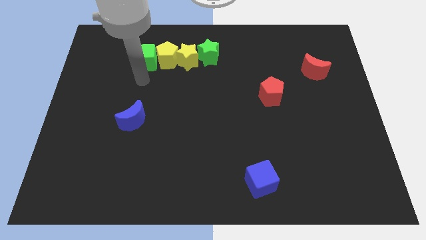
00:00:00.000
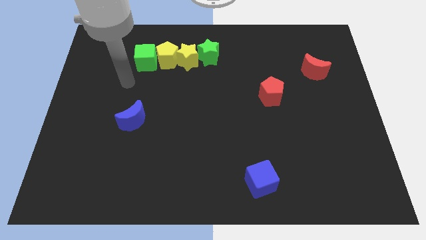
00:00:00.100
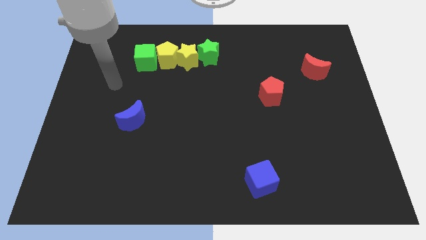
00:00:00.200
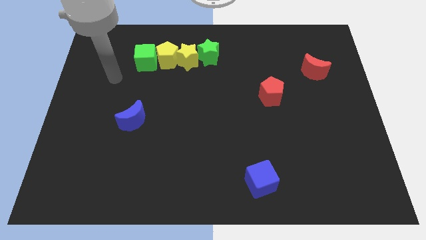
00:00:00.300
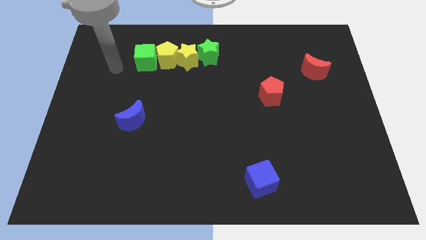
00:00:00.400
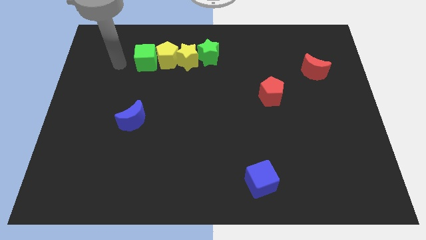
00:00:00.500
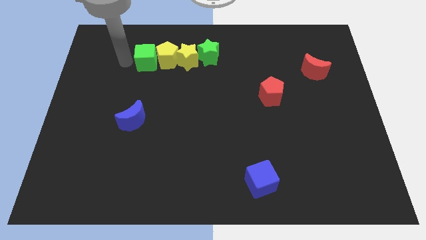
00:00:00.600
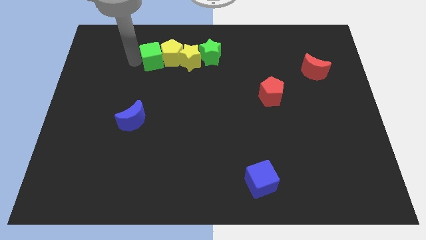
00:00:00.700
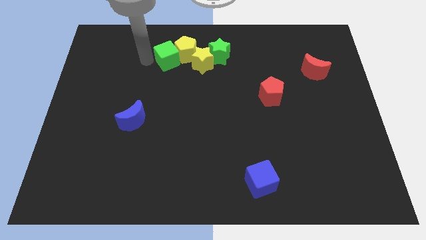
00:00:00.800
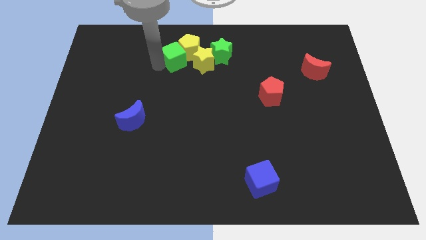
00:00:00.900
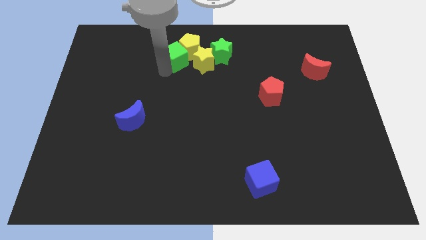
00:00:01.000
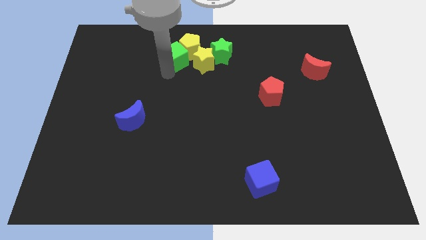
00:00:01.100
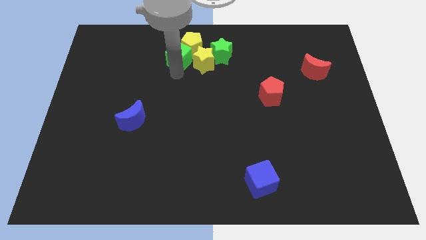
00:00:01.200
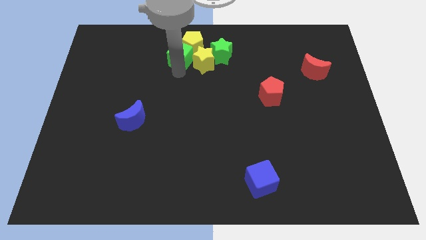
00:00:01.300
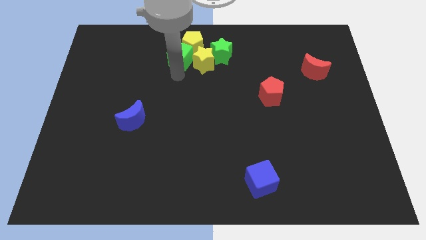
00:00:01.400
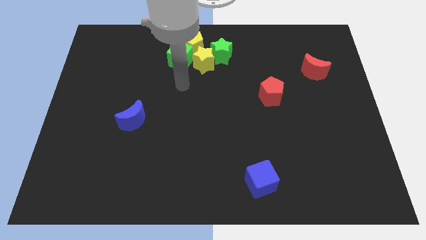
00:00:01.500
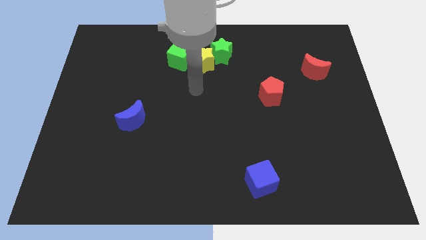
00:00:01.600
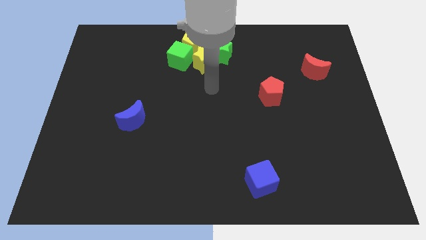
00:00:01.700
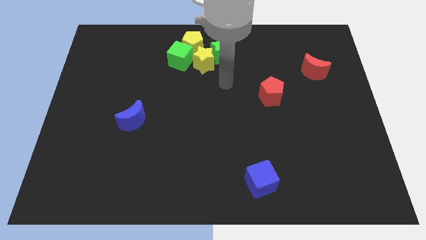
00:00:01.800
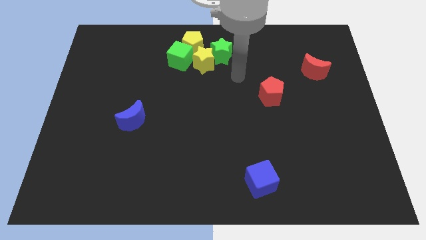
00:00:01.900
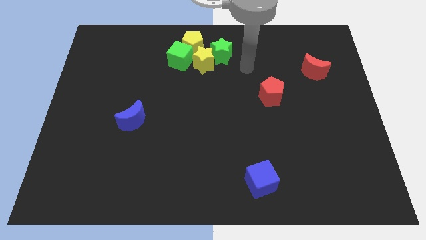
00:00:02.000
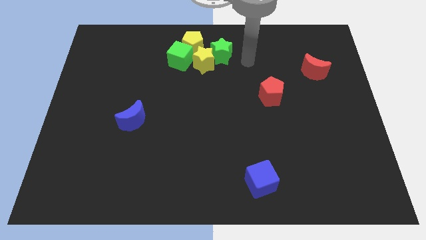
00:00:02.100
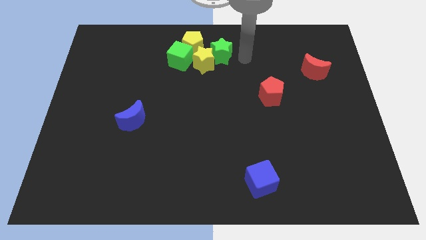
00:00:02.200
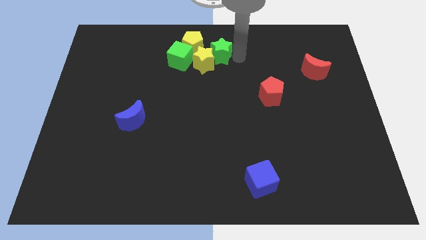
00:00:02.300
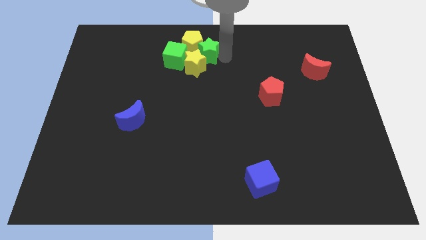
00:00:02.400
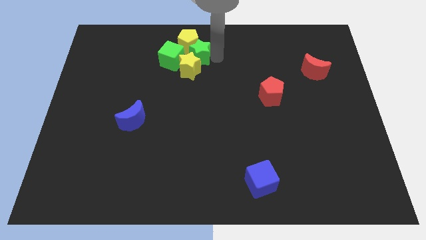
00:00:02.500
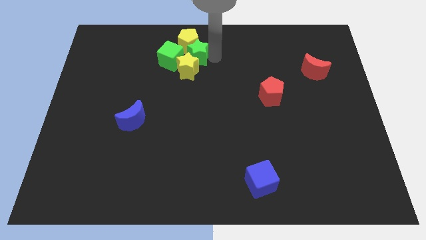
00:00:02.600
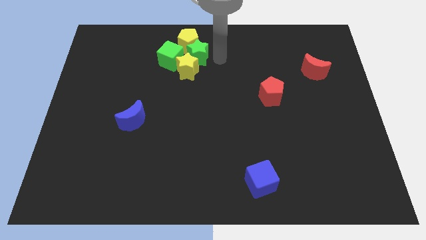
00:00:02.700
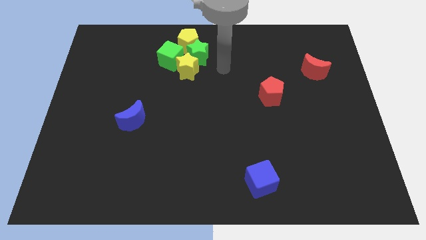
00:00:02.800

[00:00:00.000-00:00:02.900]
push green star slightly towards left

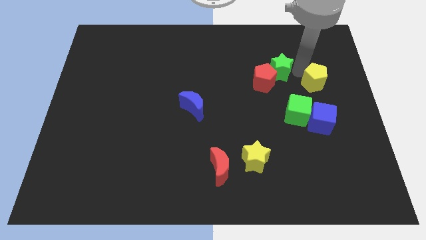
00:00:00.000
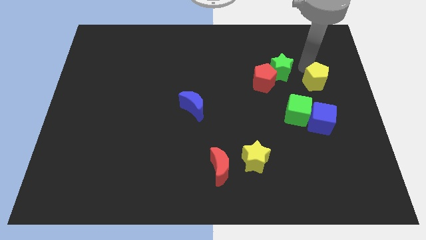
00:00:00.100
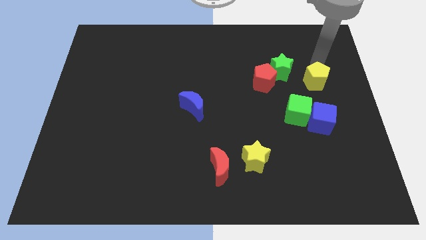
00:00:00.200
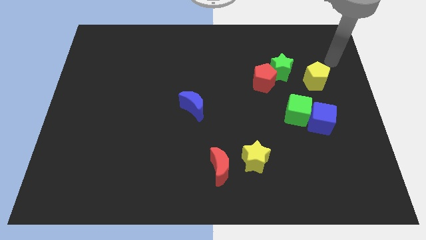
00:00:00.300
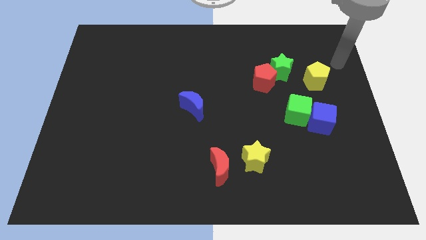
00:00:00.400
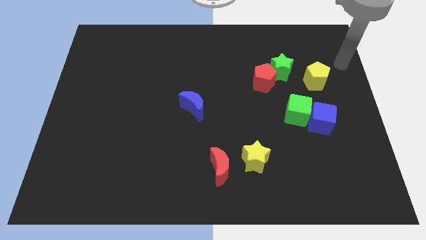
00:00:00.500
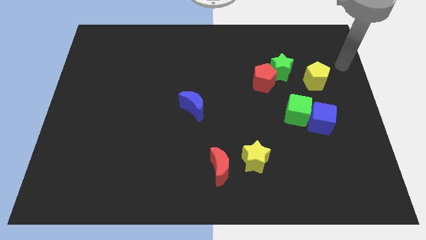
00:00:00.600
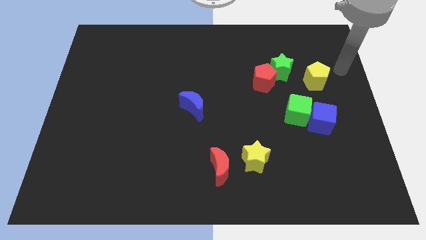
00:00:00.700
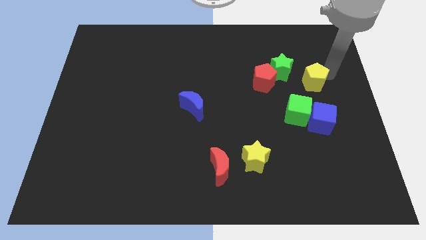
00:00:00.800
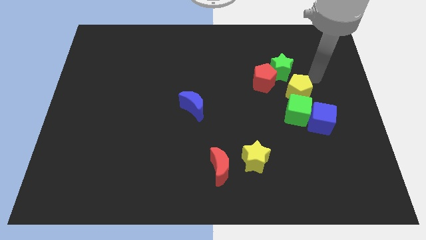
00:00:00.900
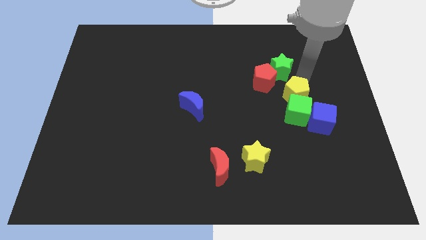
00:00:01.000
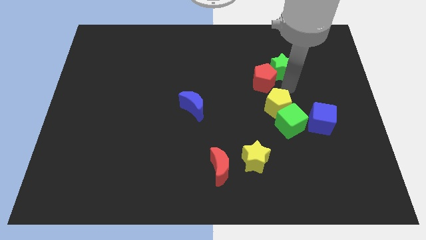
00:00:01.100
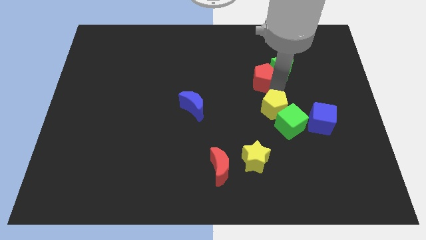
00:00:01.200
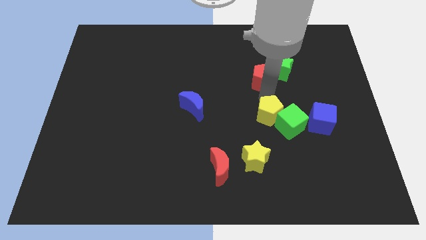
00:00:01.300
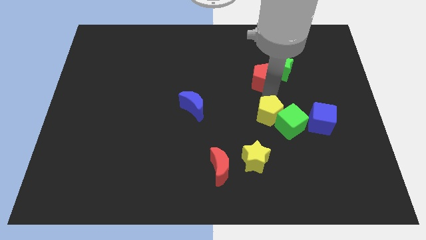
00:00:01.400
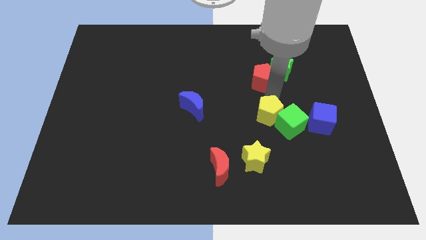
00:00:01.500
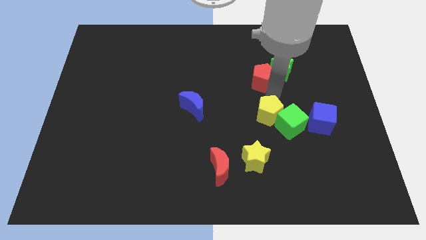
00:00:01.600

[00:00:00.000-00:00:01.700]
put the yellow pentagon into the green cube

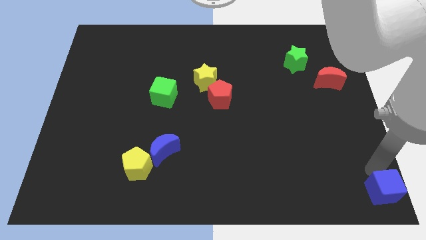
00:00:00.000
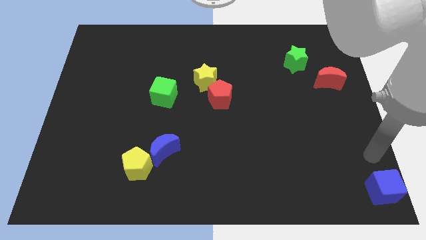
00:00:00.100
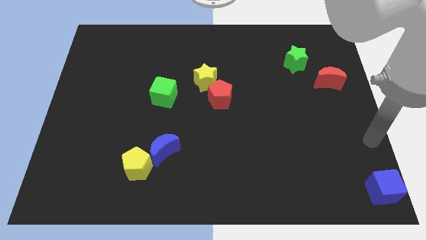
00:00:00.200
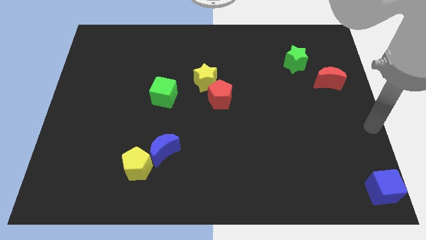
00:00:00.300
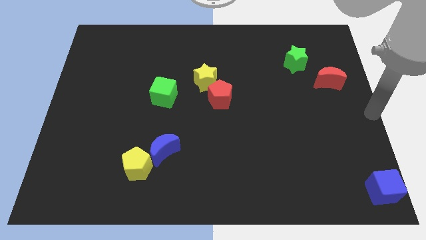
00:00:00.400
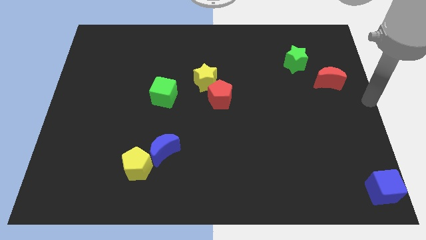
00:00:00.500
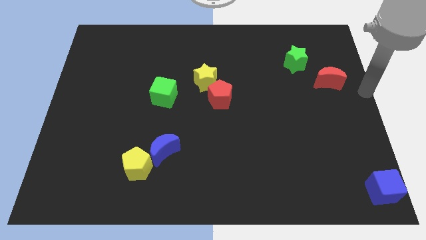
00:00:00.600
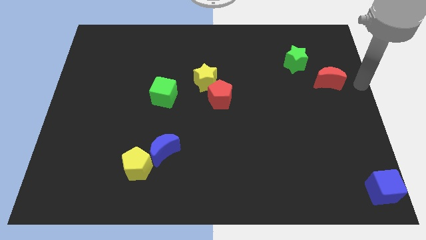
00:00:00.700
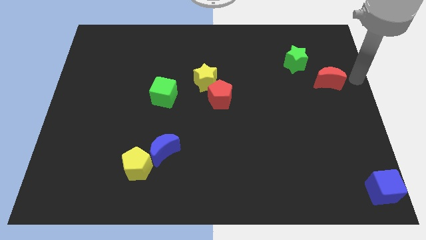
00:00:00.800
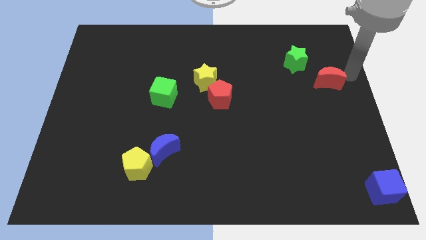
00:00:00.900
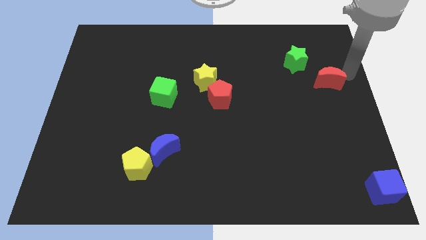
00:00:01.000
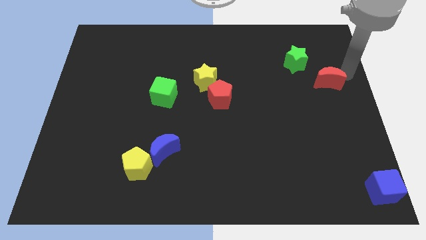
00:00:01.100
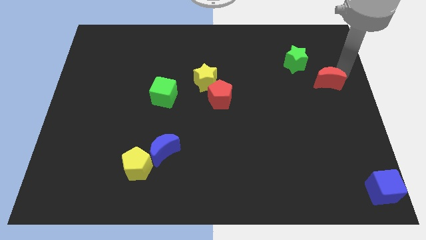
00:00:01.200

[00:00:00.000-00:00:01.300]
place your arm to the top of red moon

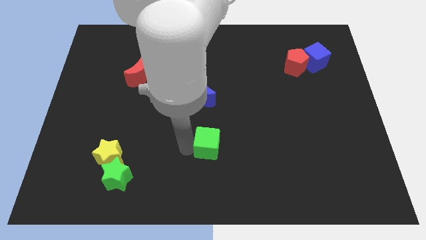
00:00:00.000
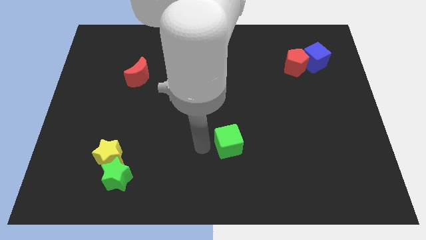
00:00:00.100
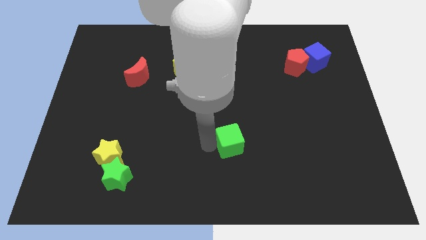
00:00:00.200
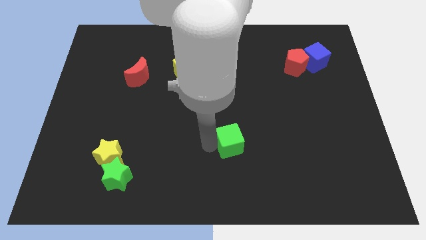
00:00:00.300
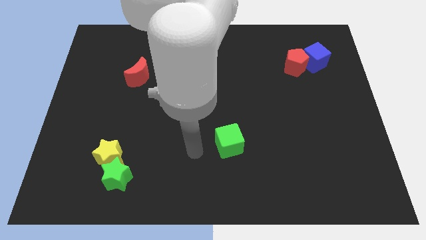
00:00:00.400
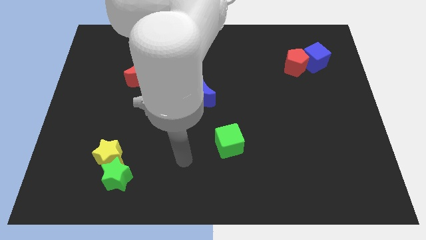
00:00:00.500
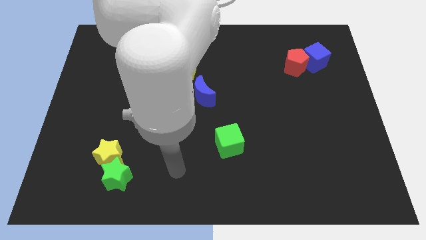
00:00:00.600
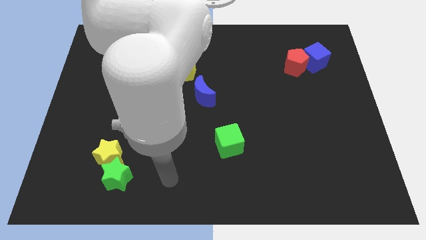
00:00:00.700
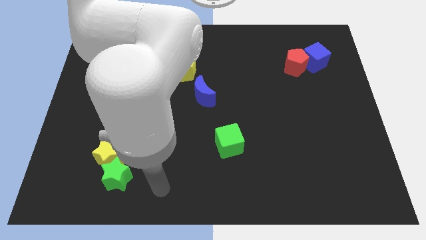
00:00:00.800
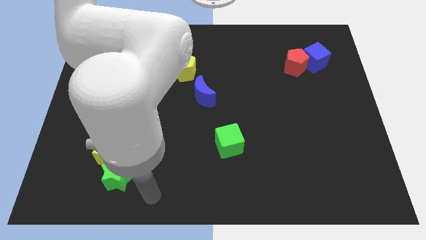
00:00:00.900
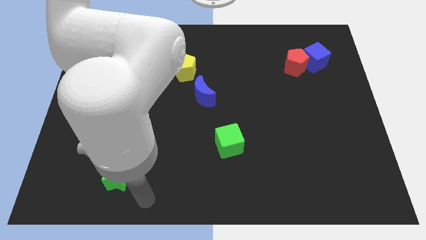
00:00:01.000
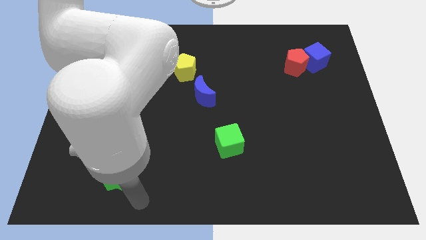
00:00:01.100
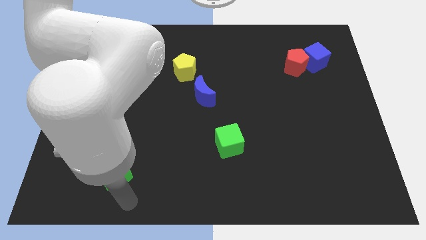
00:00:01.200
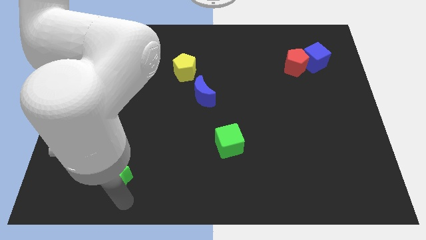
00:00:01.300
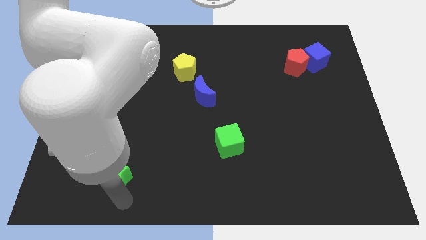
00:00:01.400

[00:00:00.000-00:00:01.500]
move the arm below the green star

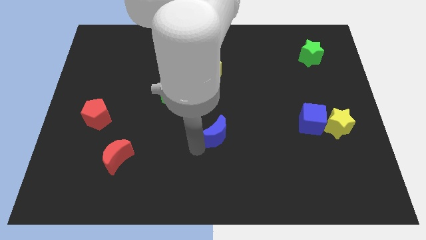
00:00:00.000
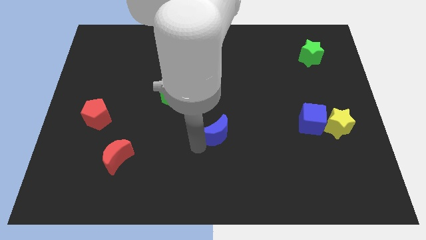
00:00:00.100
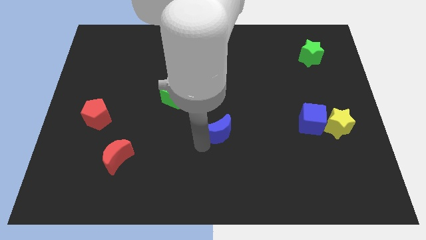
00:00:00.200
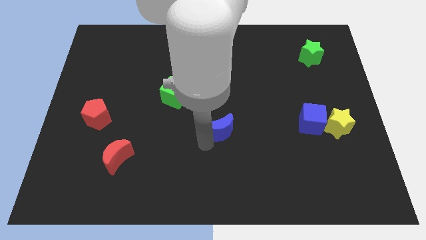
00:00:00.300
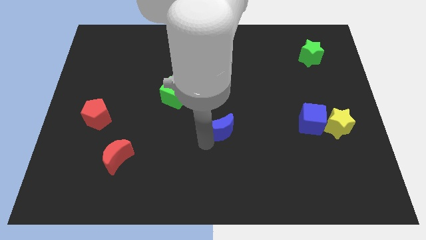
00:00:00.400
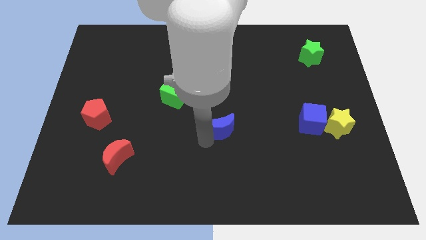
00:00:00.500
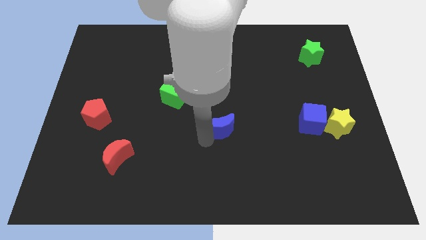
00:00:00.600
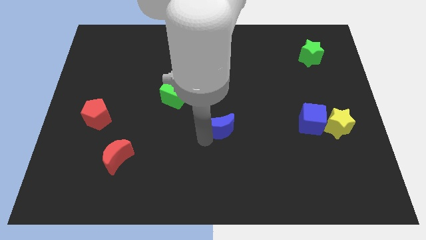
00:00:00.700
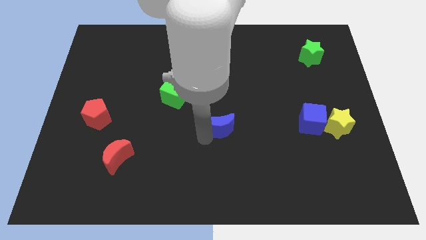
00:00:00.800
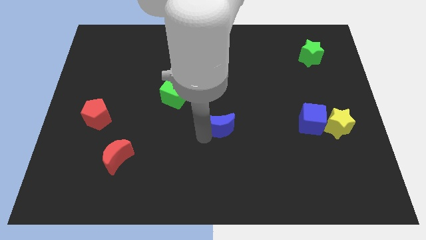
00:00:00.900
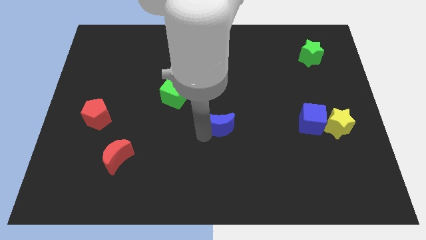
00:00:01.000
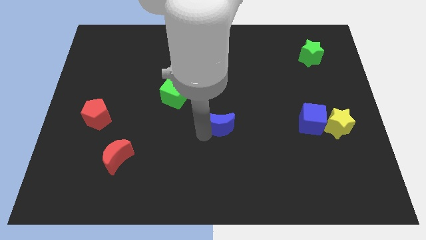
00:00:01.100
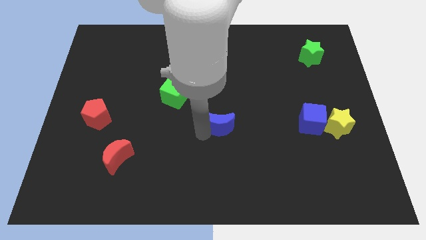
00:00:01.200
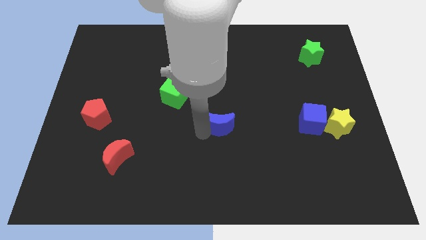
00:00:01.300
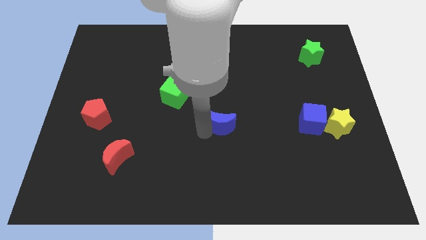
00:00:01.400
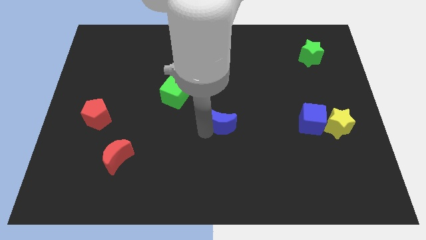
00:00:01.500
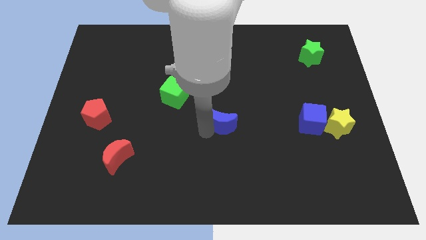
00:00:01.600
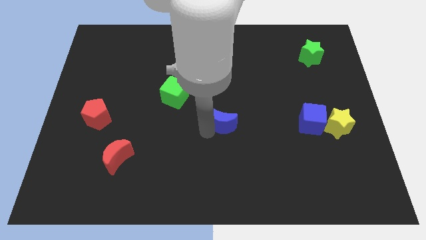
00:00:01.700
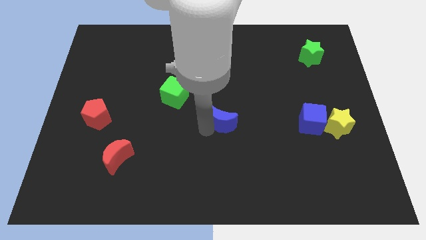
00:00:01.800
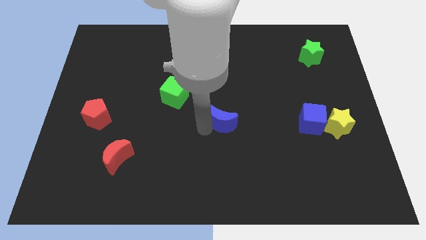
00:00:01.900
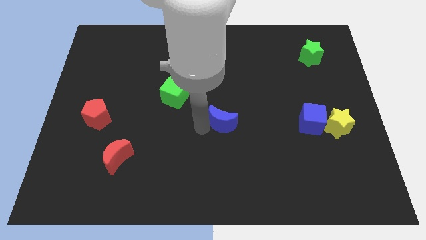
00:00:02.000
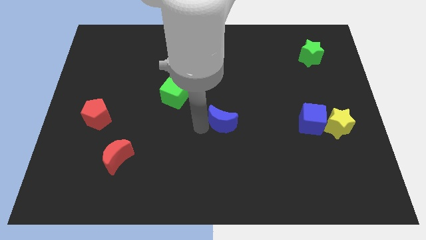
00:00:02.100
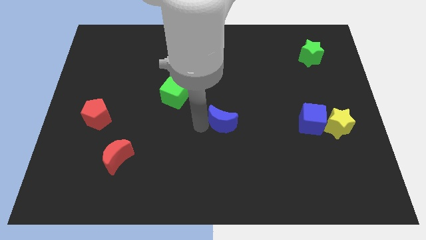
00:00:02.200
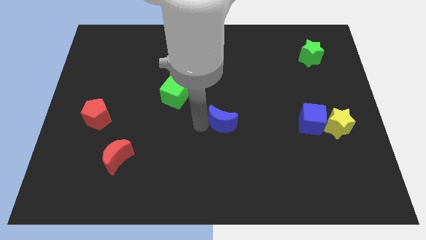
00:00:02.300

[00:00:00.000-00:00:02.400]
push the blue crescent towards the top
